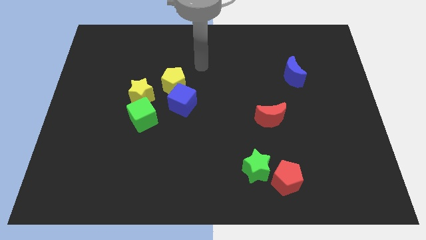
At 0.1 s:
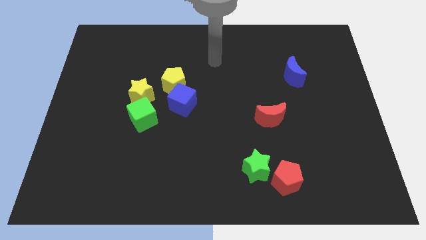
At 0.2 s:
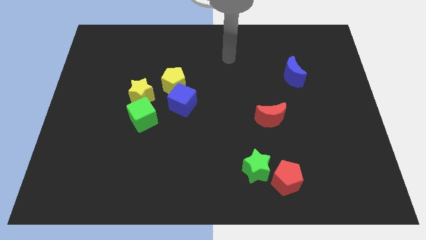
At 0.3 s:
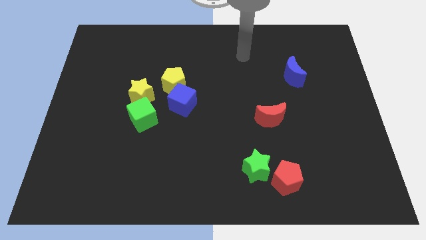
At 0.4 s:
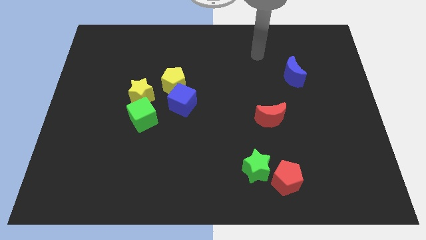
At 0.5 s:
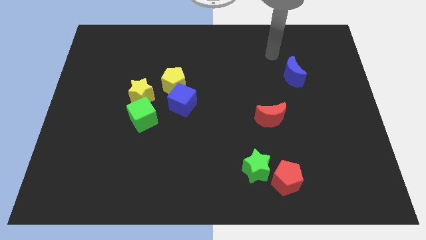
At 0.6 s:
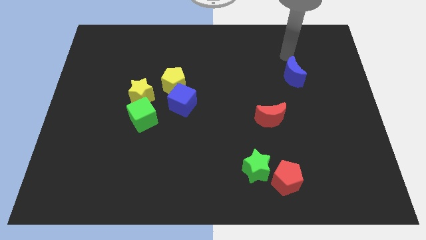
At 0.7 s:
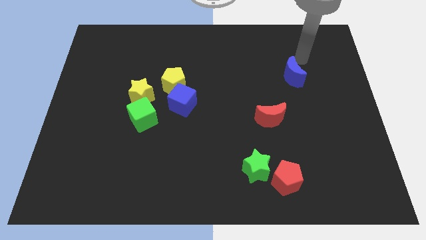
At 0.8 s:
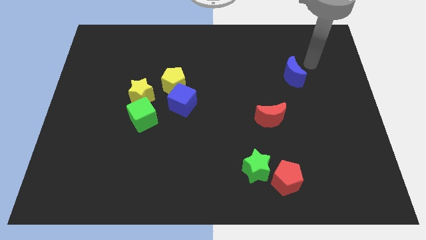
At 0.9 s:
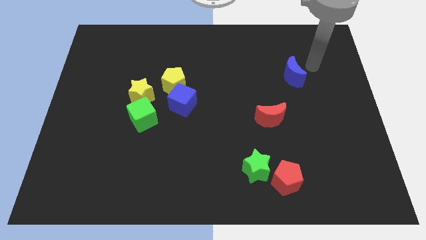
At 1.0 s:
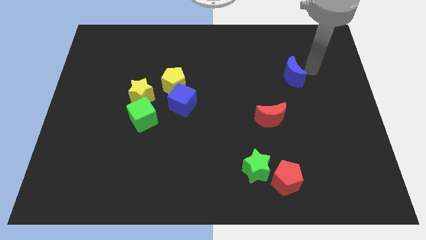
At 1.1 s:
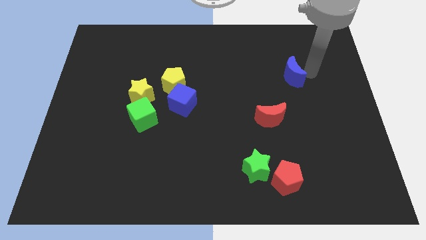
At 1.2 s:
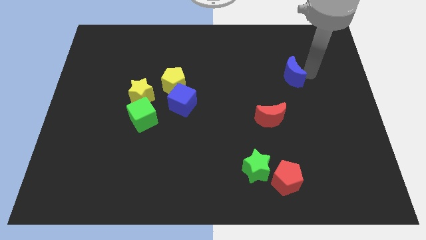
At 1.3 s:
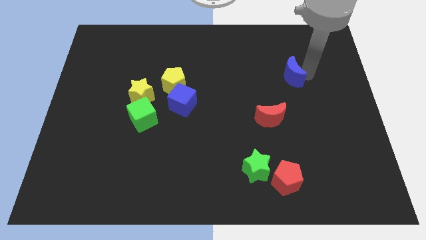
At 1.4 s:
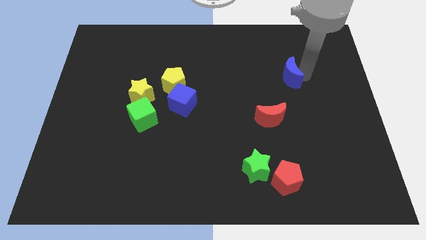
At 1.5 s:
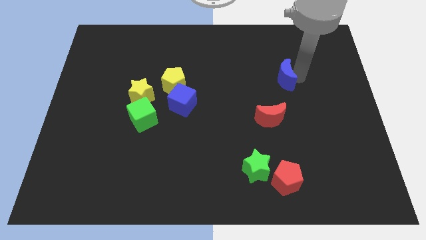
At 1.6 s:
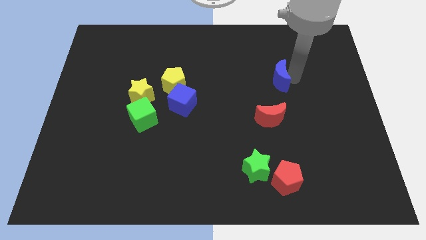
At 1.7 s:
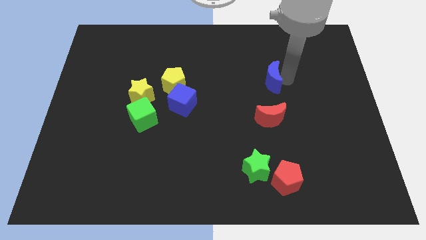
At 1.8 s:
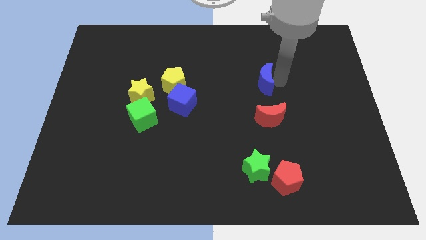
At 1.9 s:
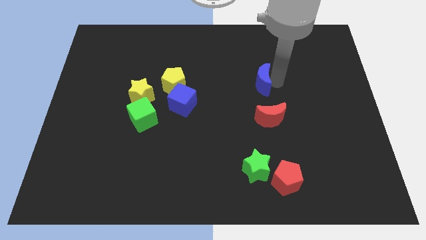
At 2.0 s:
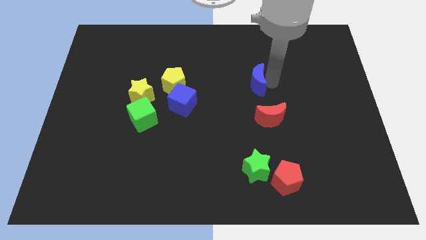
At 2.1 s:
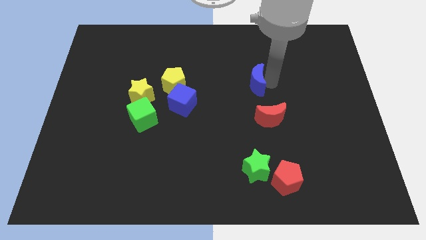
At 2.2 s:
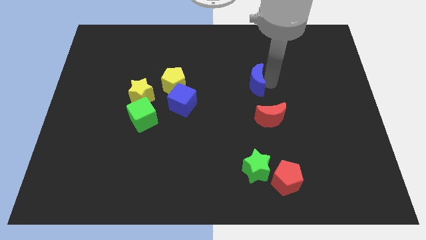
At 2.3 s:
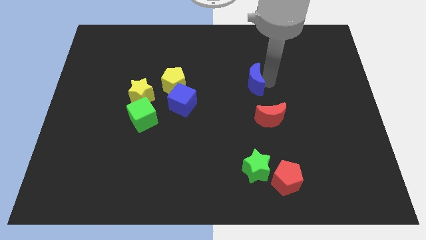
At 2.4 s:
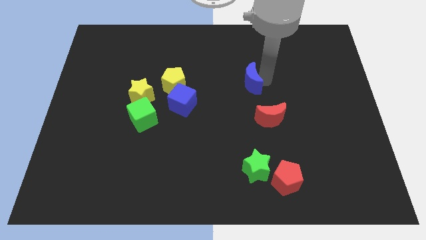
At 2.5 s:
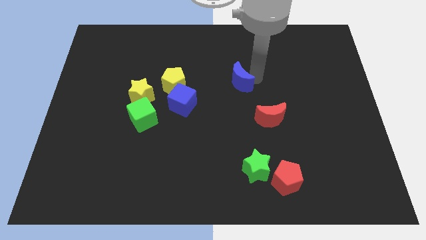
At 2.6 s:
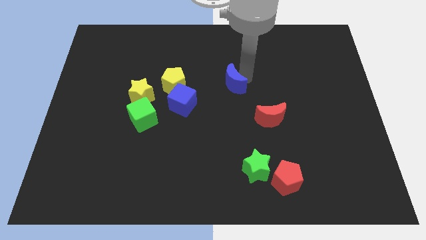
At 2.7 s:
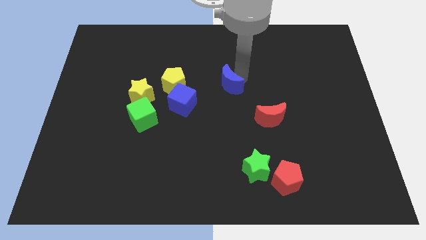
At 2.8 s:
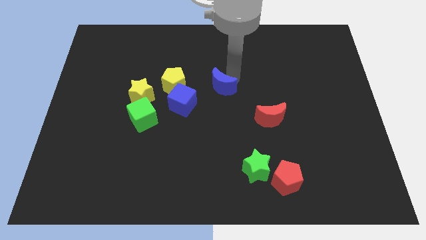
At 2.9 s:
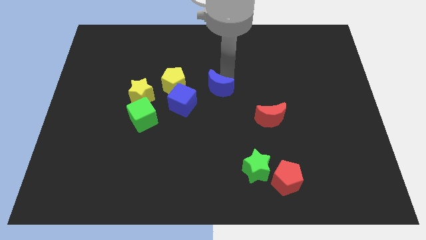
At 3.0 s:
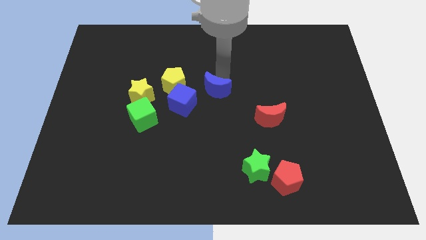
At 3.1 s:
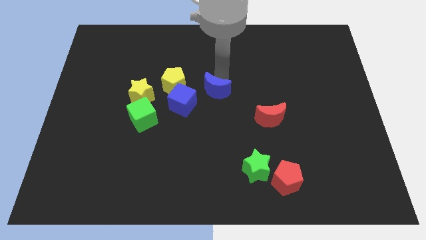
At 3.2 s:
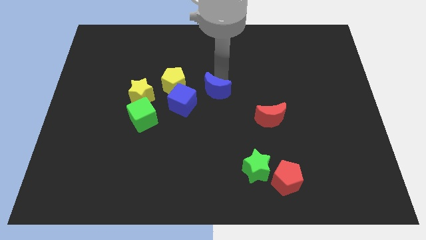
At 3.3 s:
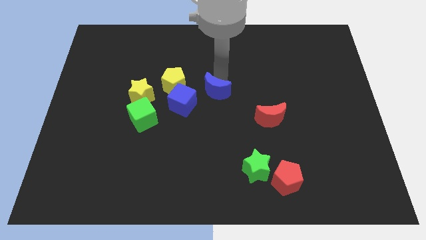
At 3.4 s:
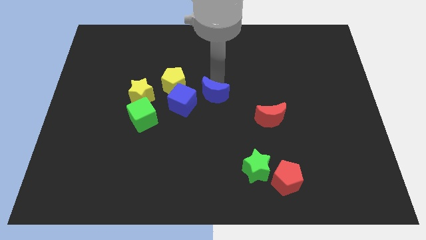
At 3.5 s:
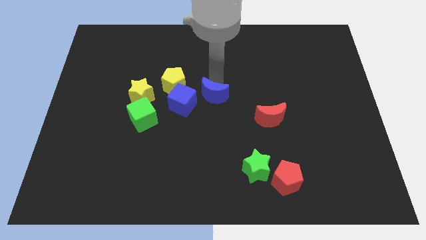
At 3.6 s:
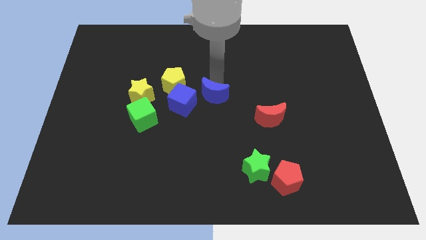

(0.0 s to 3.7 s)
push the blue crescent to the right of the blue cube

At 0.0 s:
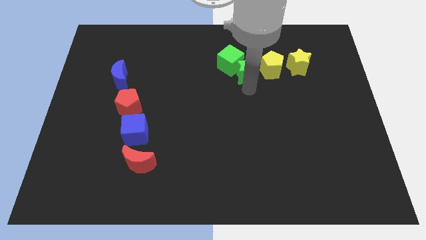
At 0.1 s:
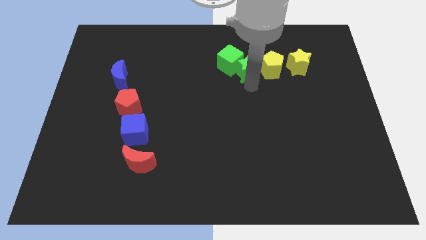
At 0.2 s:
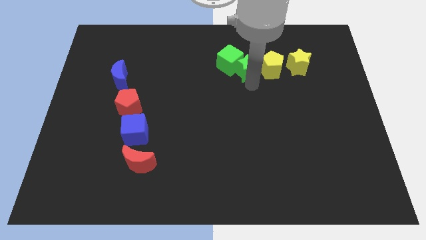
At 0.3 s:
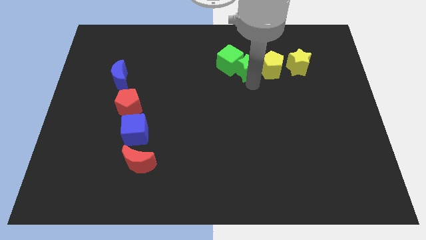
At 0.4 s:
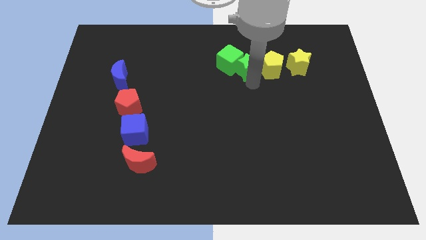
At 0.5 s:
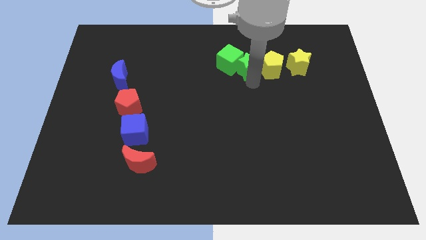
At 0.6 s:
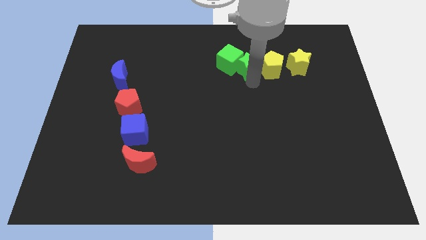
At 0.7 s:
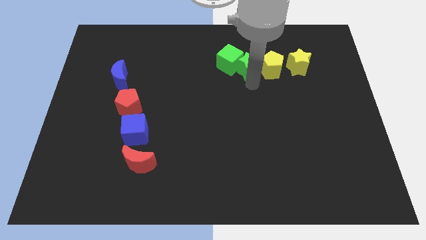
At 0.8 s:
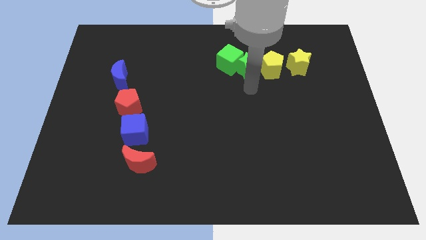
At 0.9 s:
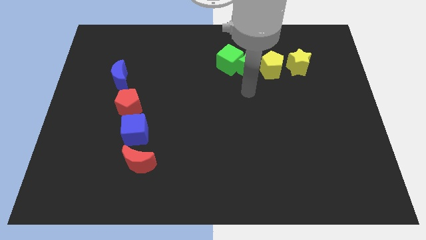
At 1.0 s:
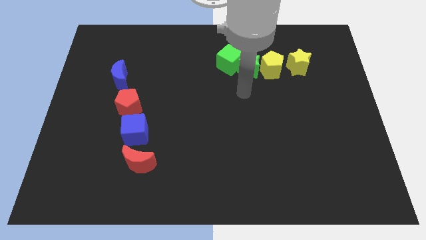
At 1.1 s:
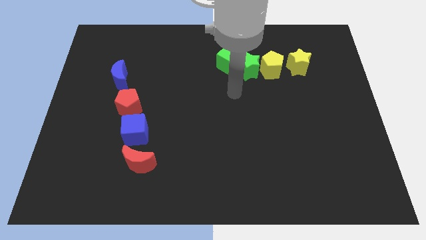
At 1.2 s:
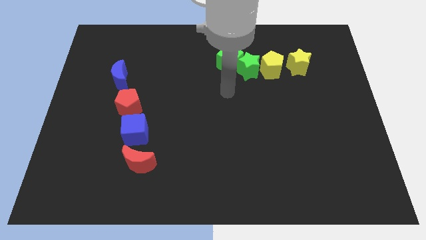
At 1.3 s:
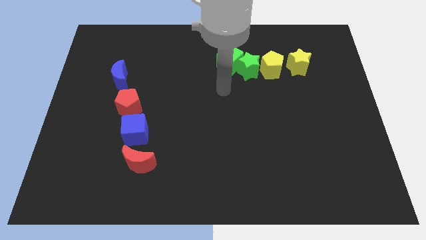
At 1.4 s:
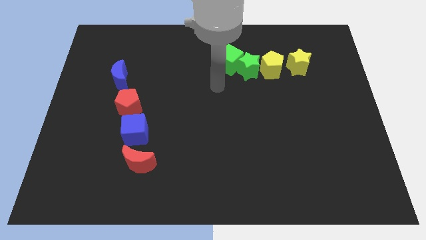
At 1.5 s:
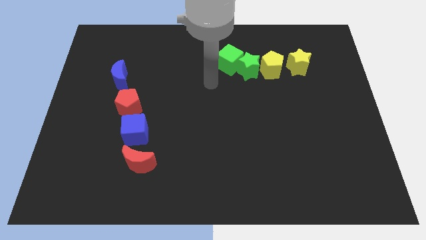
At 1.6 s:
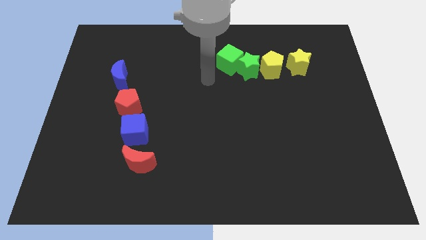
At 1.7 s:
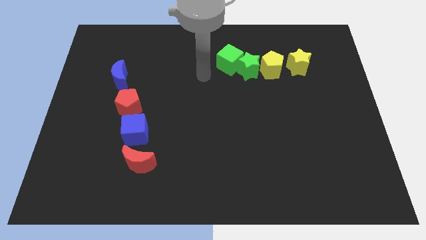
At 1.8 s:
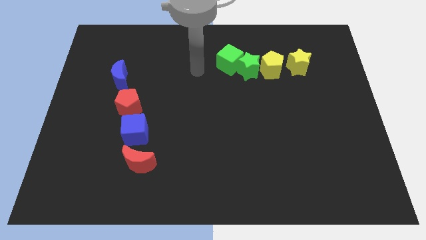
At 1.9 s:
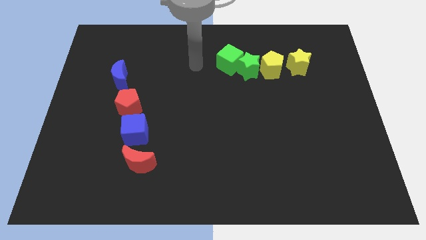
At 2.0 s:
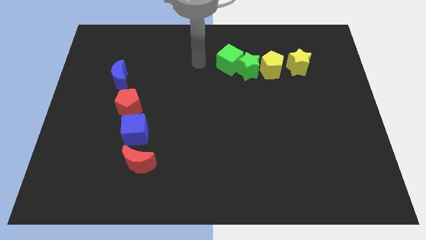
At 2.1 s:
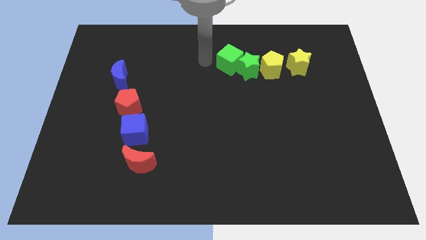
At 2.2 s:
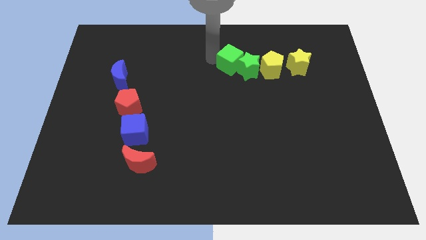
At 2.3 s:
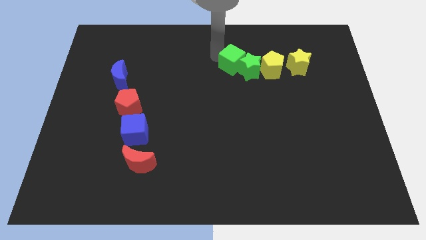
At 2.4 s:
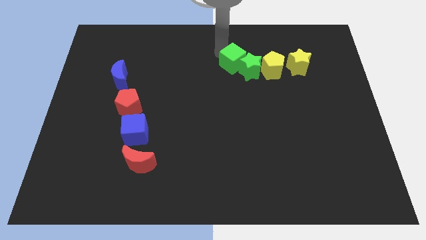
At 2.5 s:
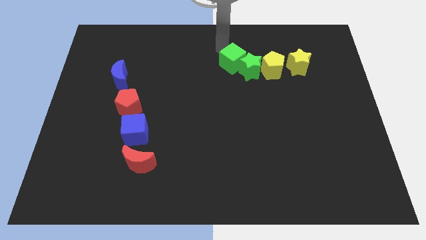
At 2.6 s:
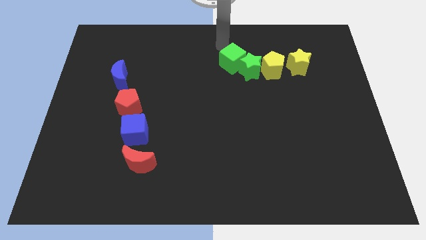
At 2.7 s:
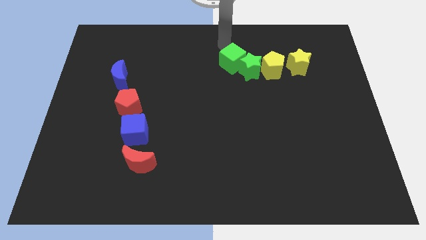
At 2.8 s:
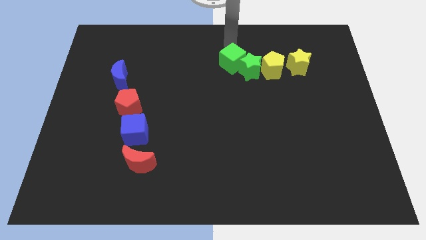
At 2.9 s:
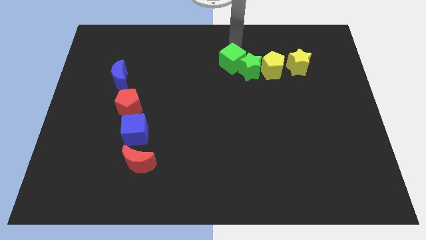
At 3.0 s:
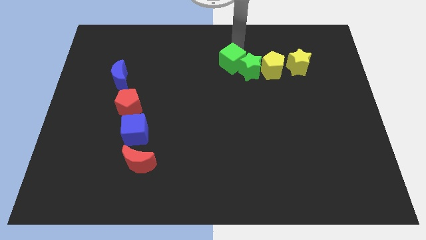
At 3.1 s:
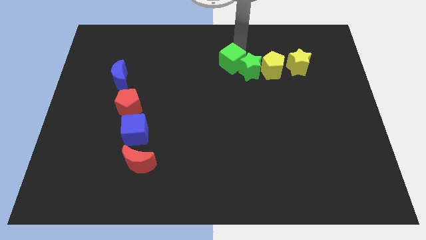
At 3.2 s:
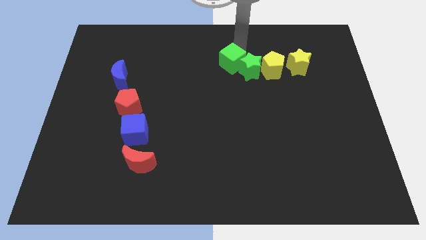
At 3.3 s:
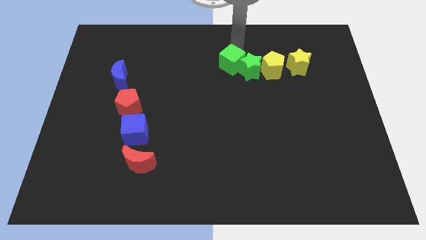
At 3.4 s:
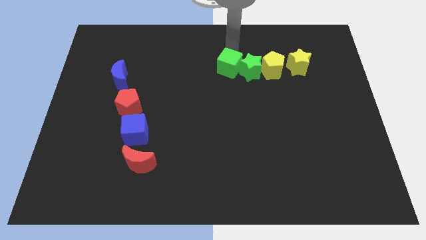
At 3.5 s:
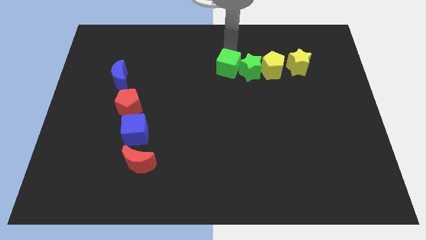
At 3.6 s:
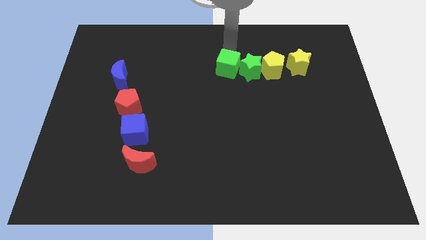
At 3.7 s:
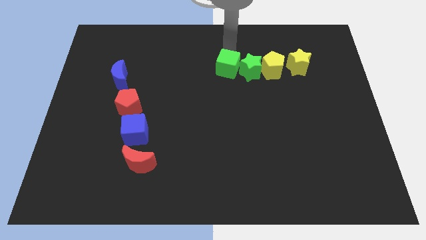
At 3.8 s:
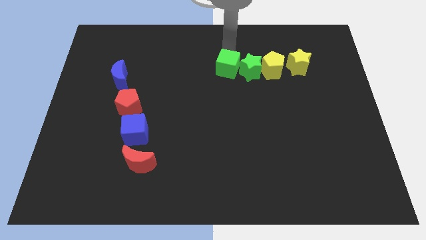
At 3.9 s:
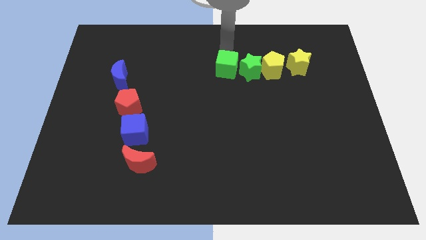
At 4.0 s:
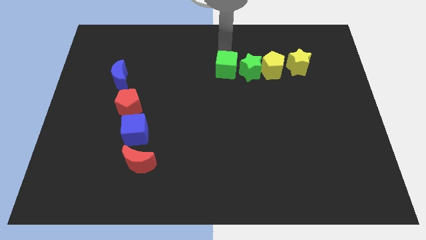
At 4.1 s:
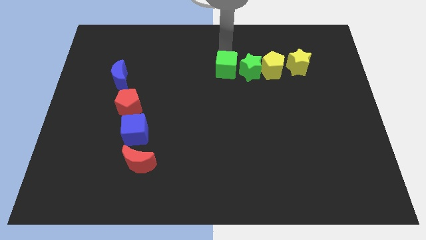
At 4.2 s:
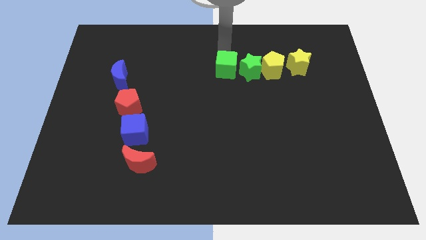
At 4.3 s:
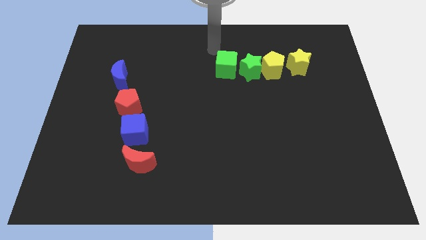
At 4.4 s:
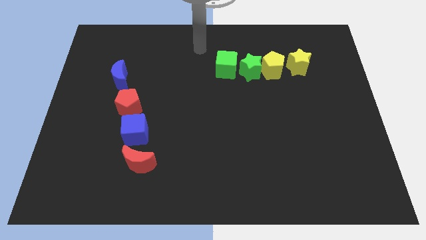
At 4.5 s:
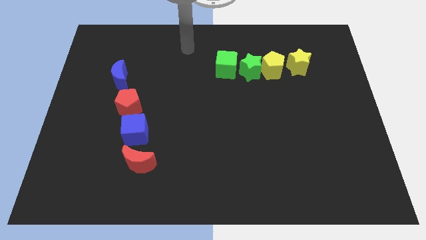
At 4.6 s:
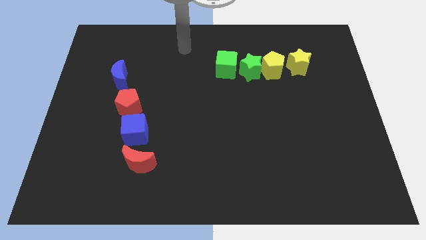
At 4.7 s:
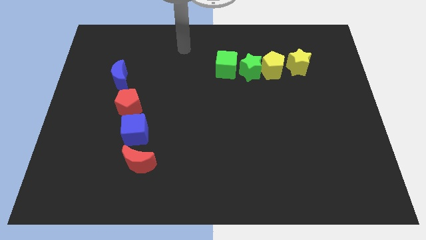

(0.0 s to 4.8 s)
adjust the green blocks to the left of yellow blocks

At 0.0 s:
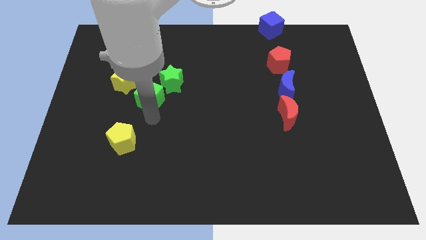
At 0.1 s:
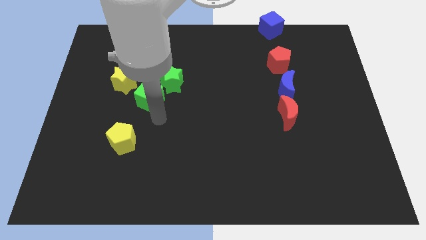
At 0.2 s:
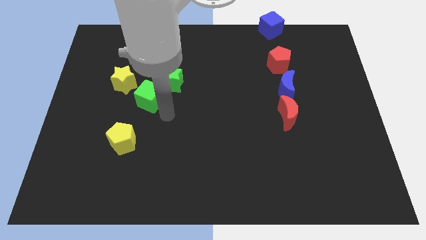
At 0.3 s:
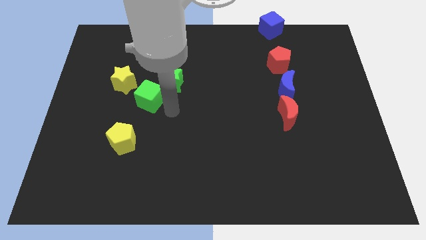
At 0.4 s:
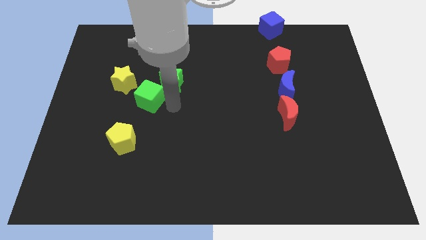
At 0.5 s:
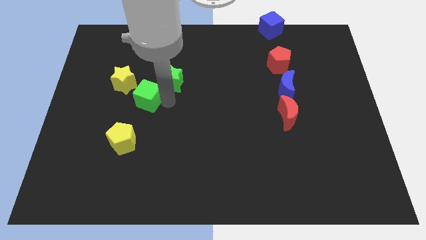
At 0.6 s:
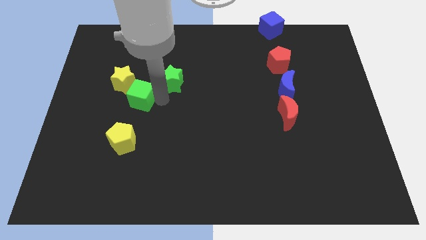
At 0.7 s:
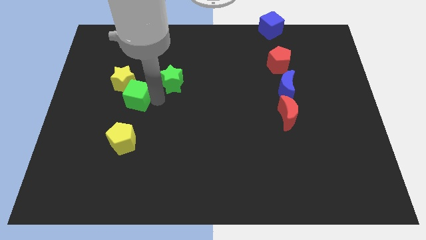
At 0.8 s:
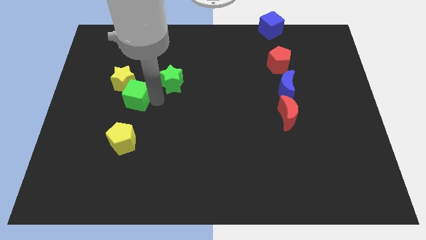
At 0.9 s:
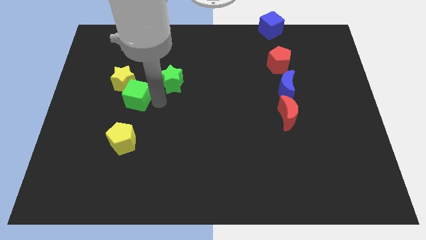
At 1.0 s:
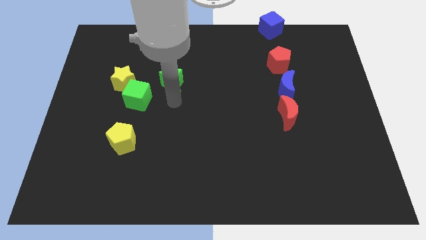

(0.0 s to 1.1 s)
make the green cube touch the bottom right of the yellow star
